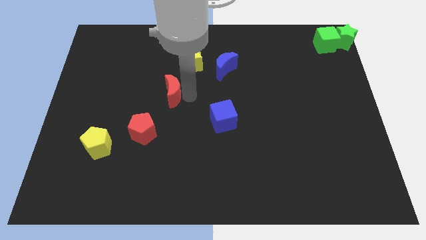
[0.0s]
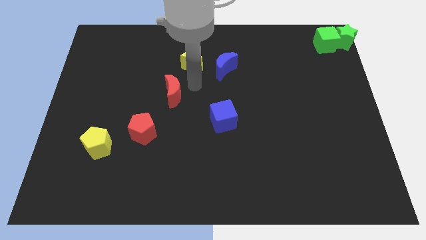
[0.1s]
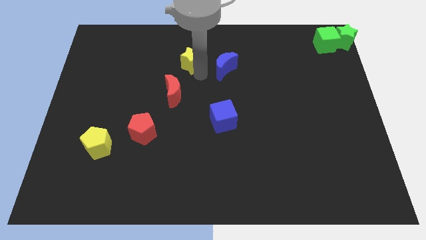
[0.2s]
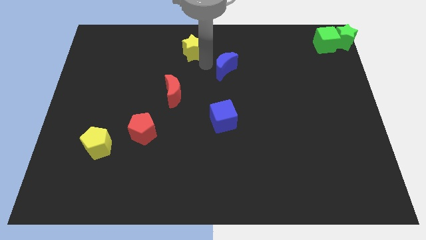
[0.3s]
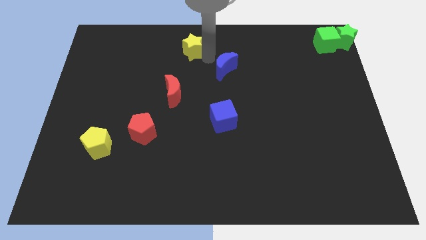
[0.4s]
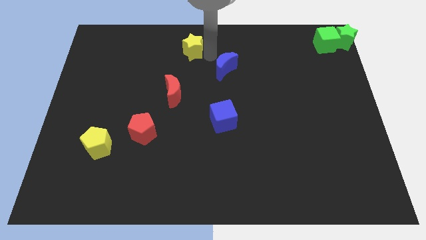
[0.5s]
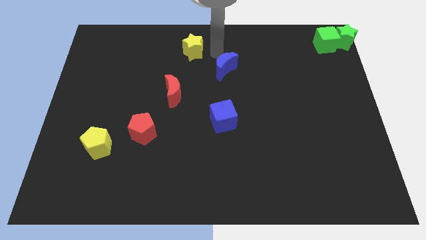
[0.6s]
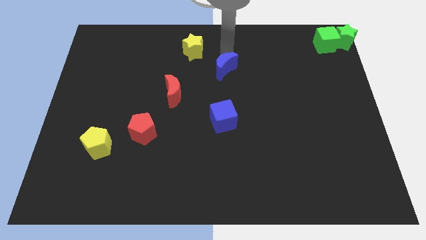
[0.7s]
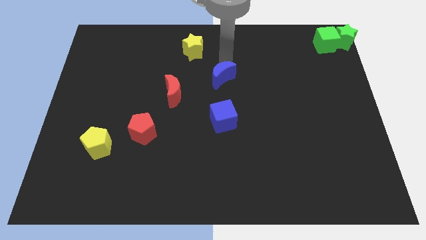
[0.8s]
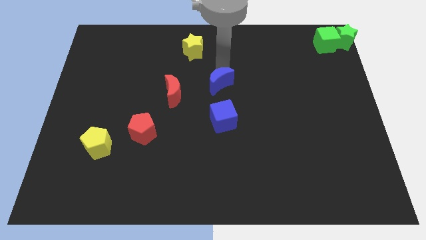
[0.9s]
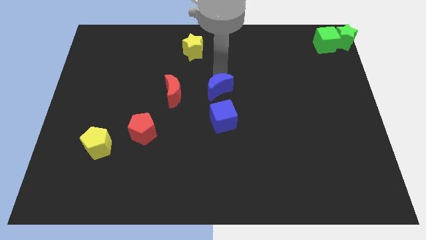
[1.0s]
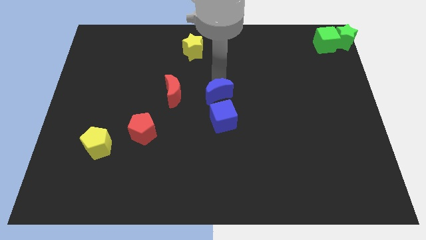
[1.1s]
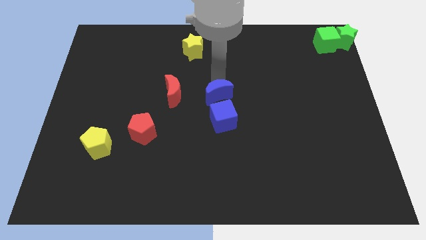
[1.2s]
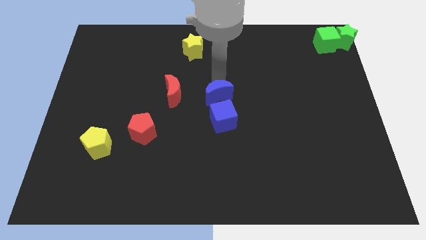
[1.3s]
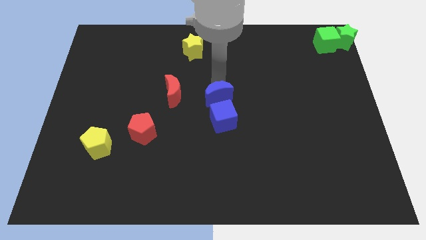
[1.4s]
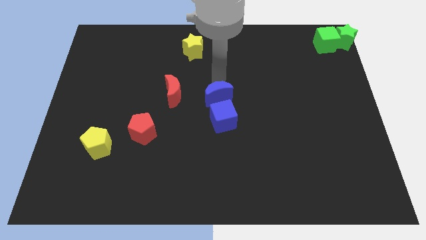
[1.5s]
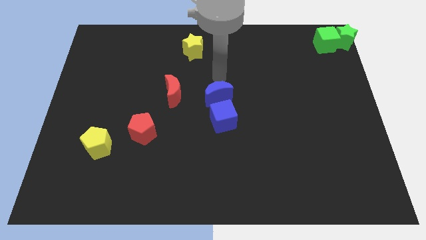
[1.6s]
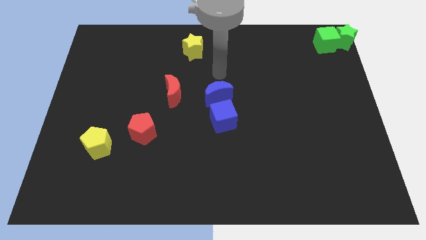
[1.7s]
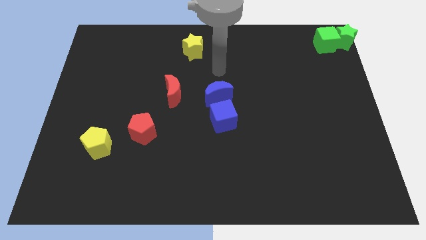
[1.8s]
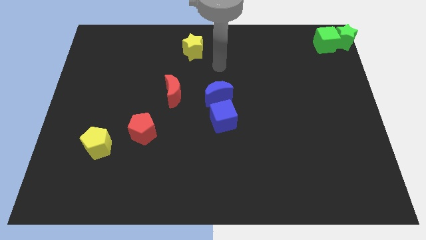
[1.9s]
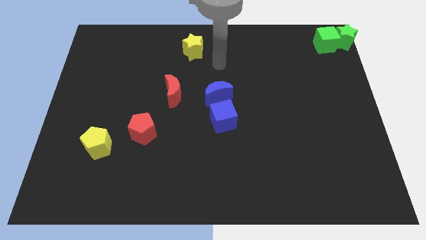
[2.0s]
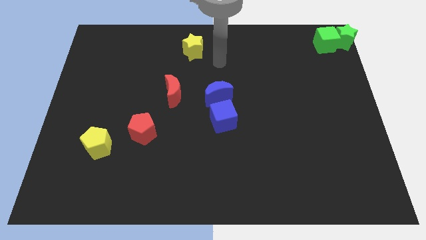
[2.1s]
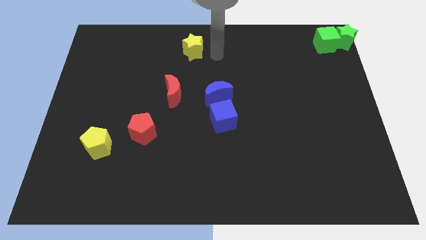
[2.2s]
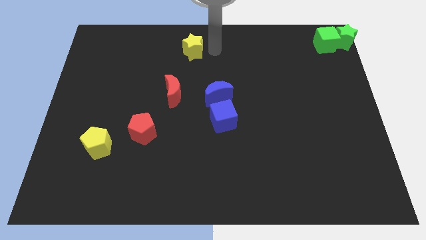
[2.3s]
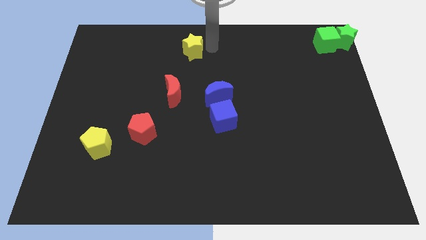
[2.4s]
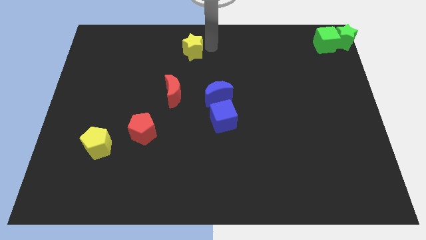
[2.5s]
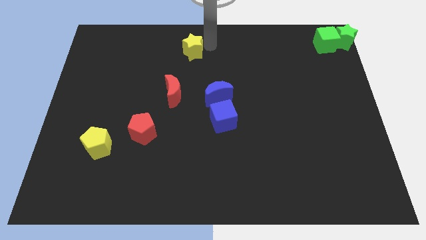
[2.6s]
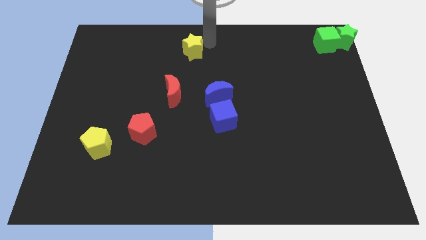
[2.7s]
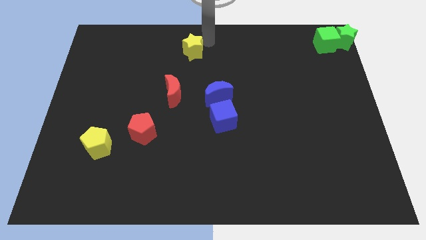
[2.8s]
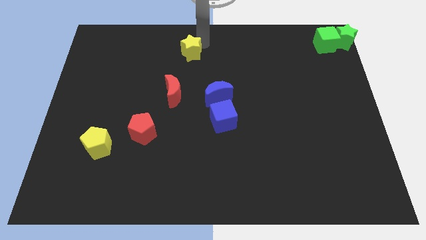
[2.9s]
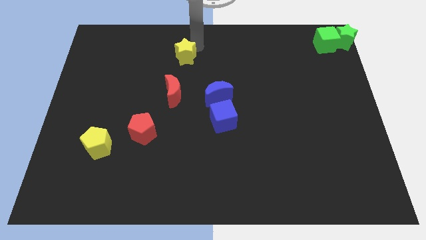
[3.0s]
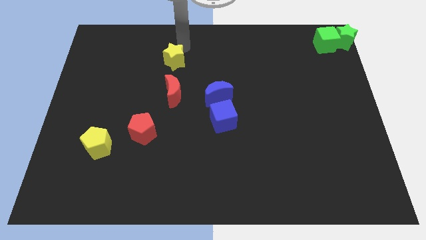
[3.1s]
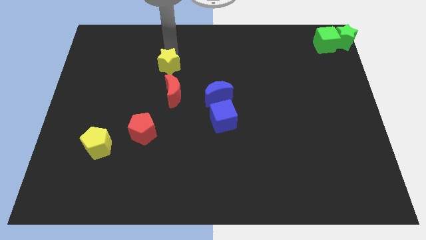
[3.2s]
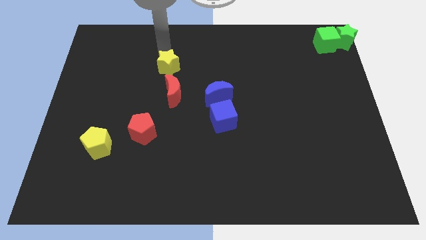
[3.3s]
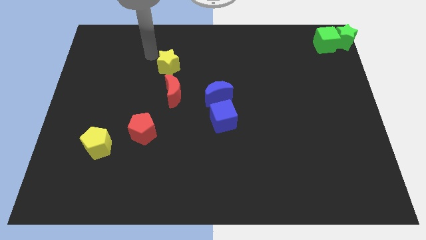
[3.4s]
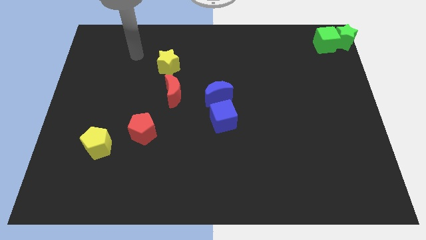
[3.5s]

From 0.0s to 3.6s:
push the blue crescent above to the blue cube

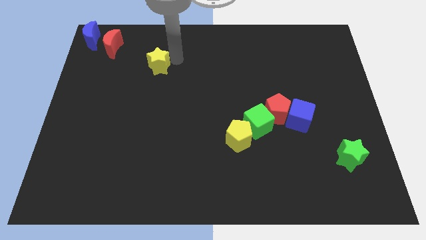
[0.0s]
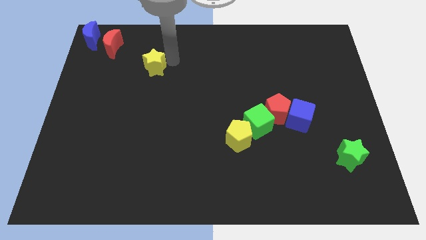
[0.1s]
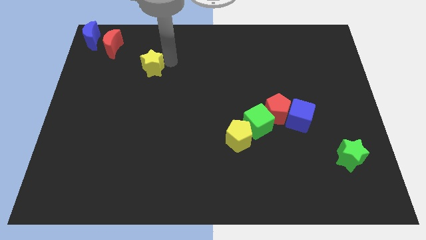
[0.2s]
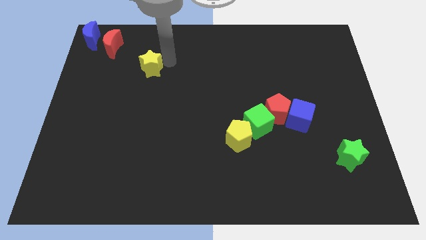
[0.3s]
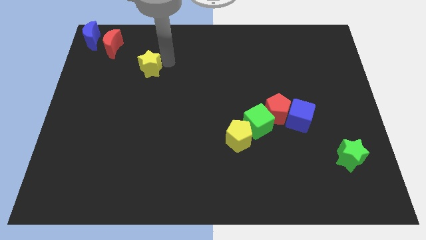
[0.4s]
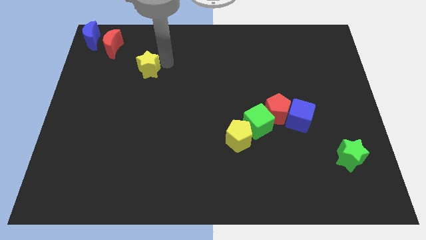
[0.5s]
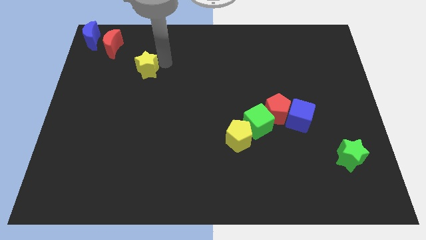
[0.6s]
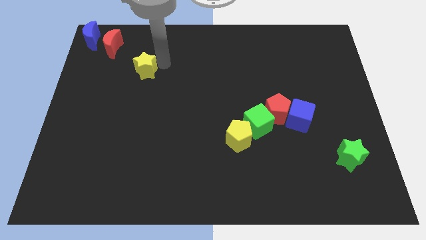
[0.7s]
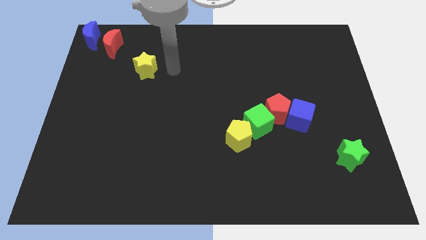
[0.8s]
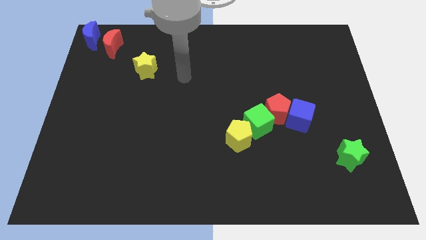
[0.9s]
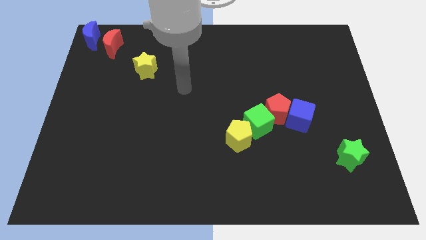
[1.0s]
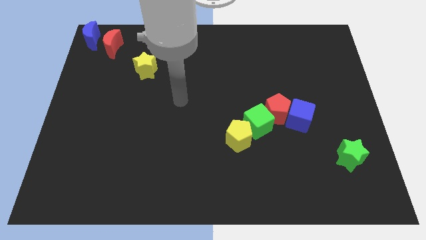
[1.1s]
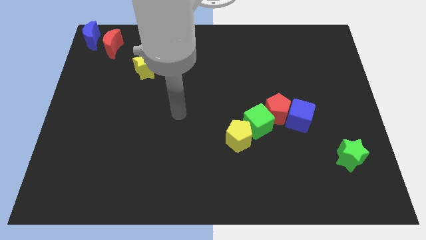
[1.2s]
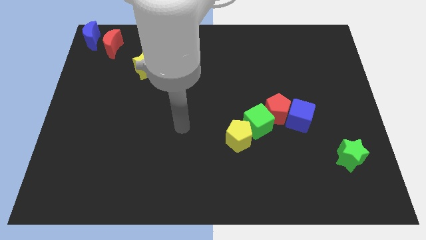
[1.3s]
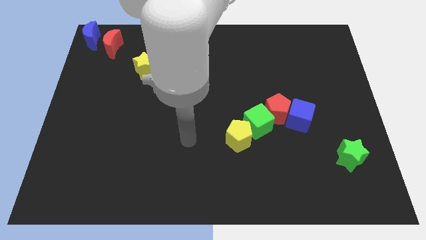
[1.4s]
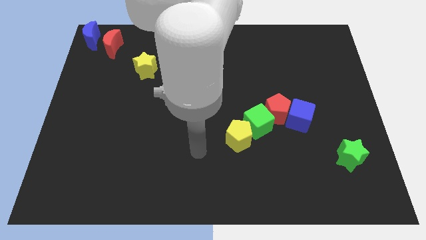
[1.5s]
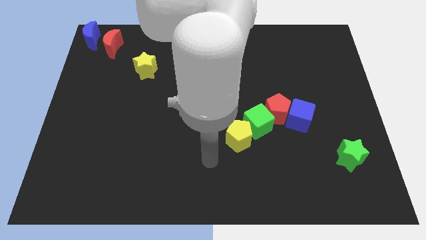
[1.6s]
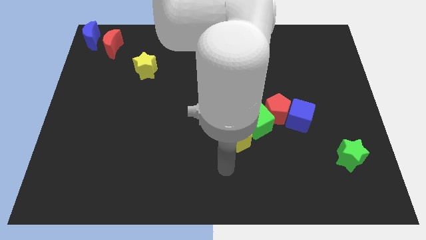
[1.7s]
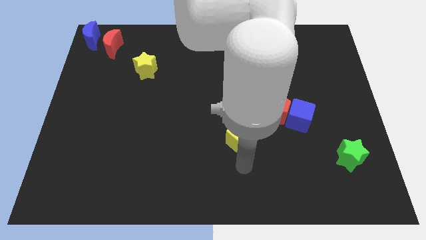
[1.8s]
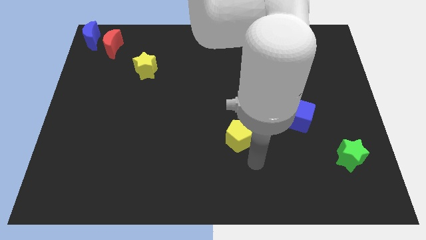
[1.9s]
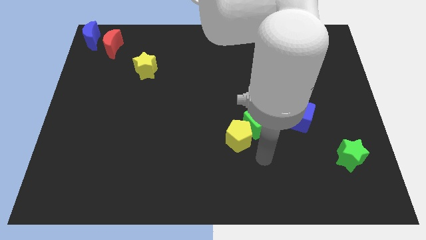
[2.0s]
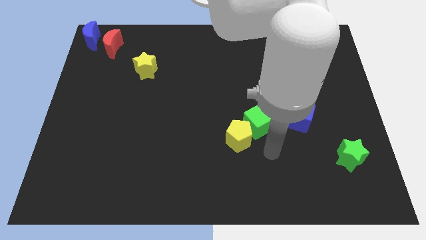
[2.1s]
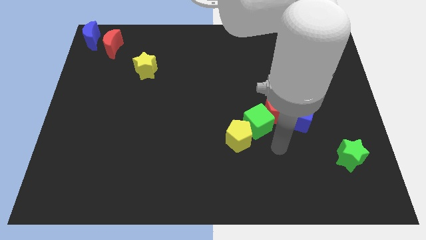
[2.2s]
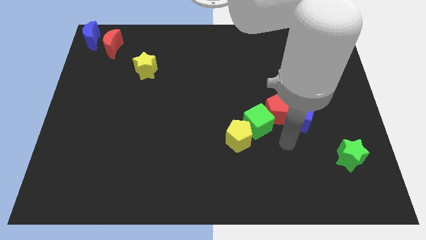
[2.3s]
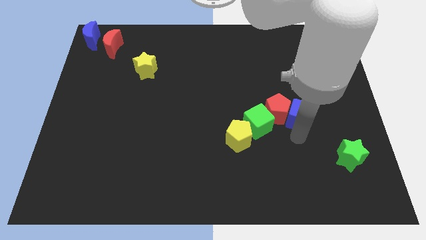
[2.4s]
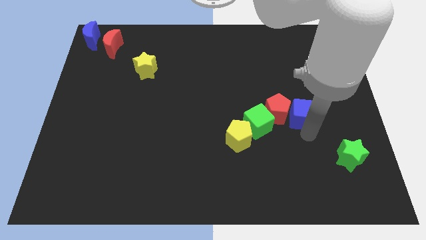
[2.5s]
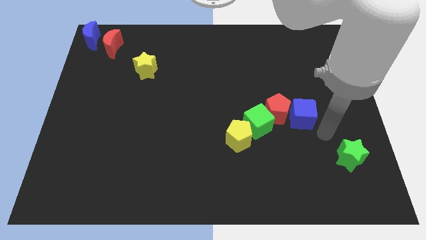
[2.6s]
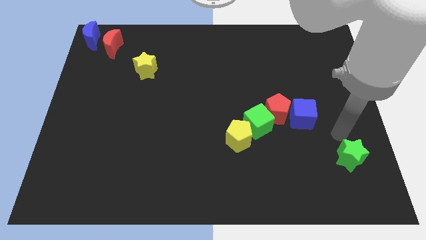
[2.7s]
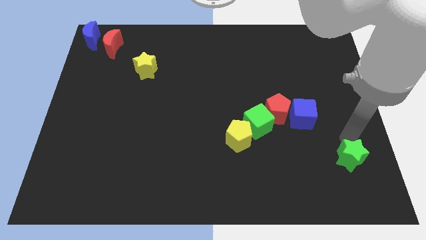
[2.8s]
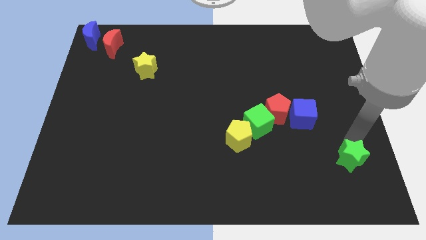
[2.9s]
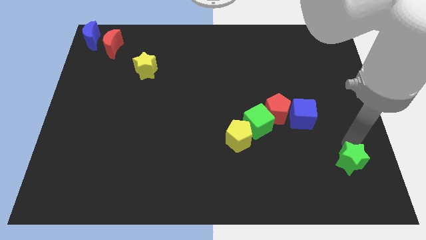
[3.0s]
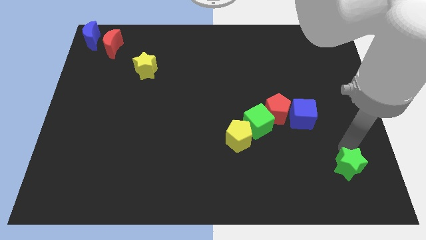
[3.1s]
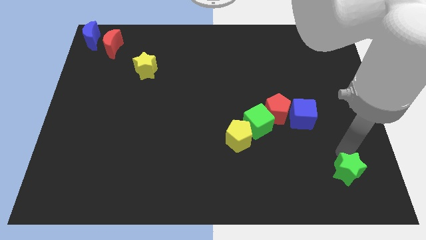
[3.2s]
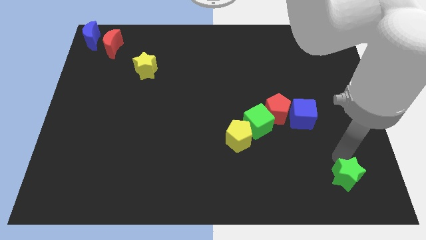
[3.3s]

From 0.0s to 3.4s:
move your arm away from the yellow star

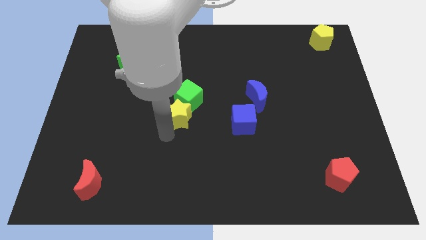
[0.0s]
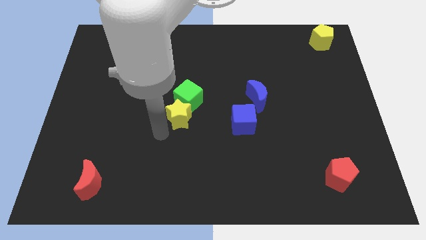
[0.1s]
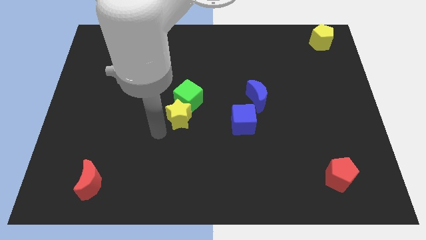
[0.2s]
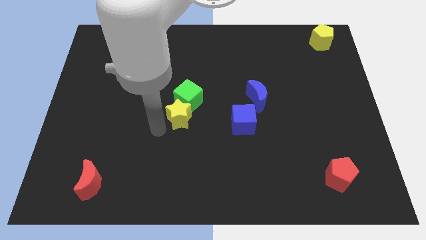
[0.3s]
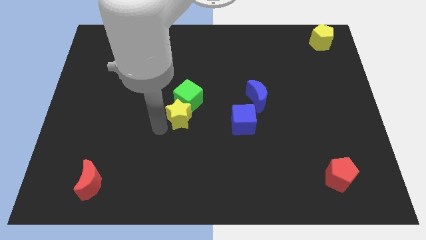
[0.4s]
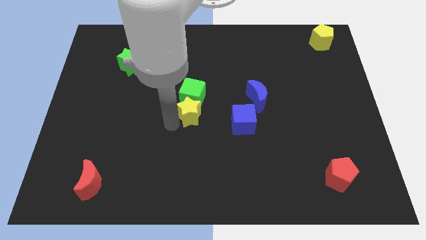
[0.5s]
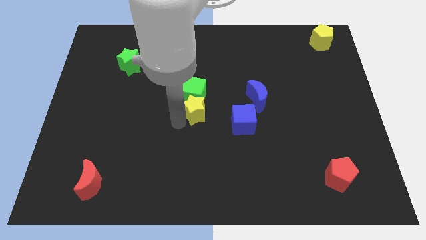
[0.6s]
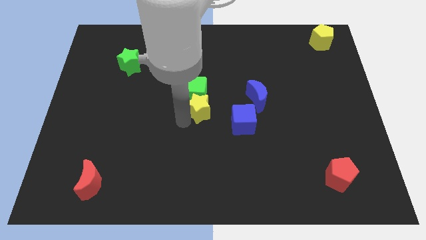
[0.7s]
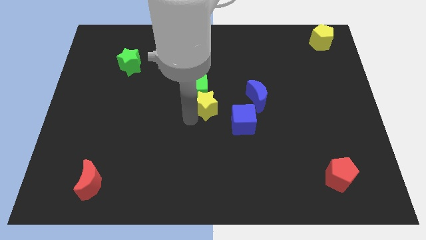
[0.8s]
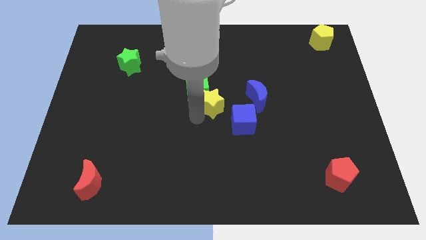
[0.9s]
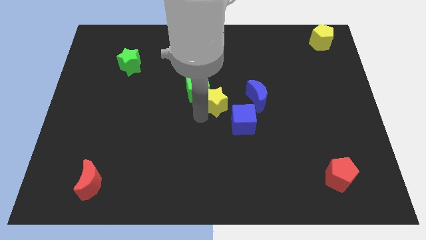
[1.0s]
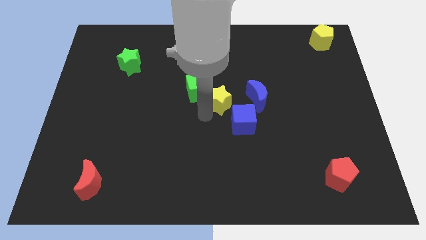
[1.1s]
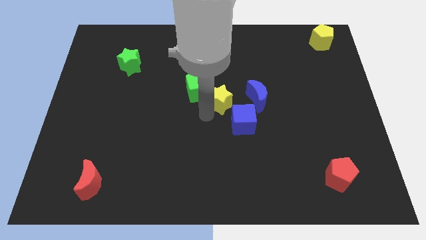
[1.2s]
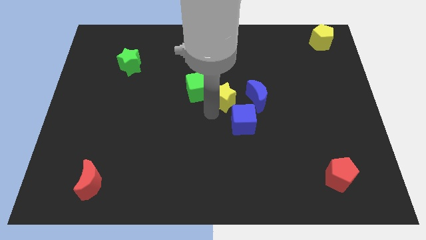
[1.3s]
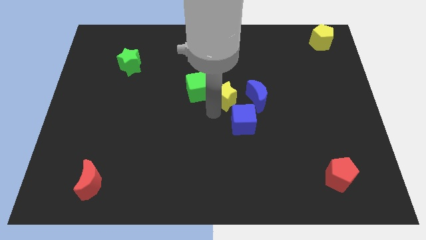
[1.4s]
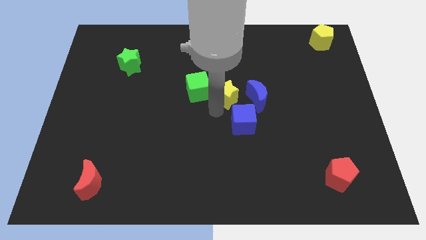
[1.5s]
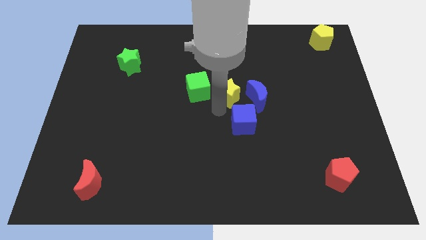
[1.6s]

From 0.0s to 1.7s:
place yellow star to the center of the board

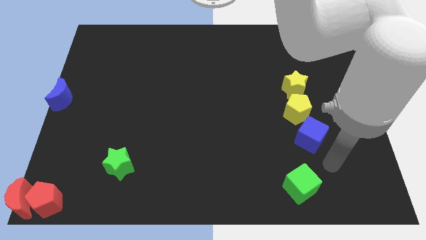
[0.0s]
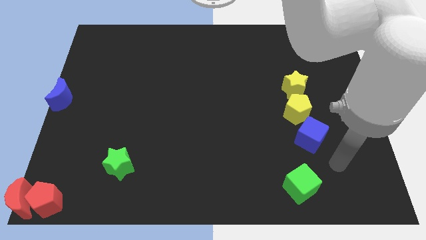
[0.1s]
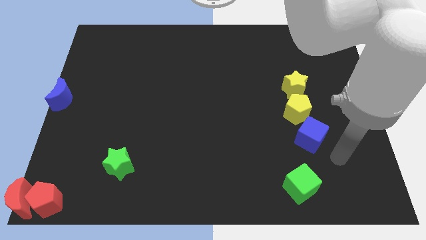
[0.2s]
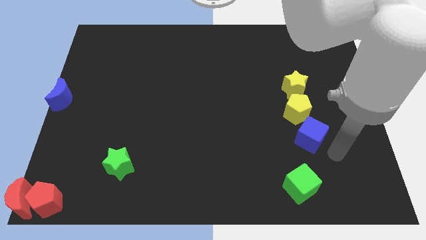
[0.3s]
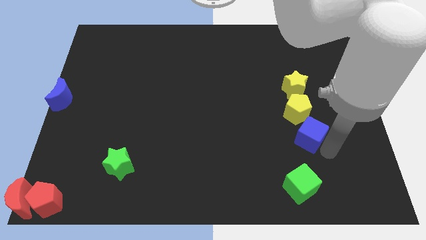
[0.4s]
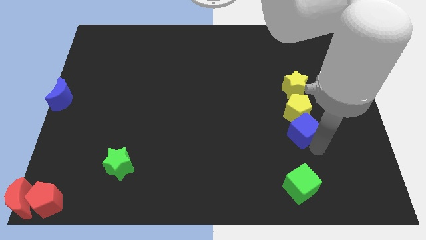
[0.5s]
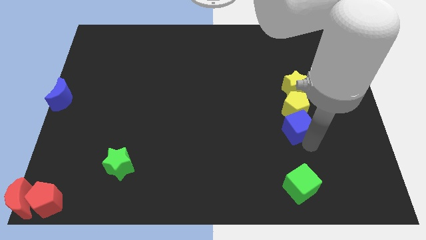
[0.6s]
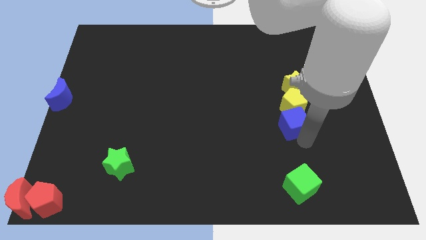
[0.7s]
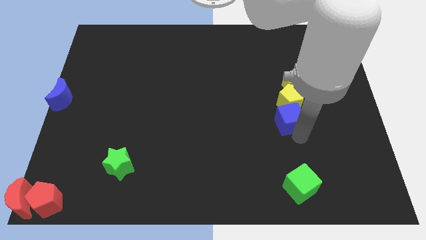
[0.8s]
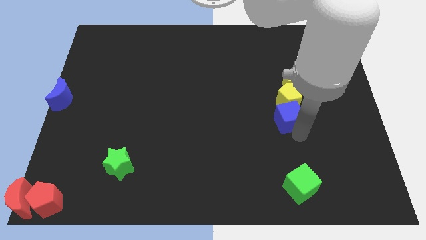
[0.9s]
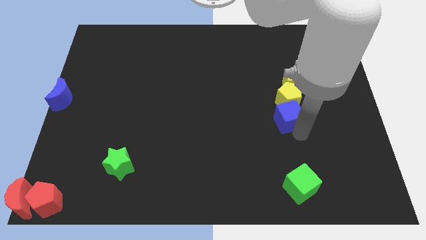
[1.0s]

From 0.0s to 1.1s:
push the blue cube into the yellow pentagon
